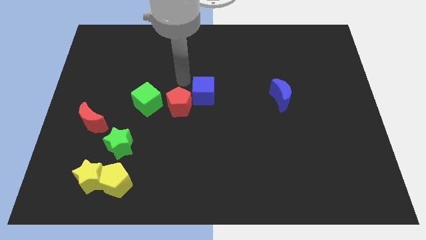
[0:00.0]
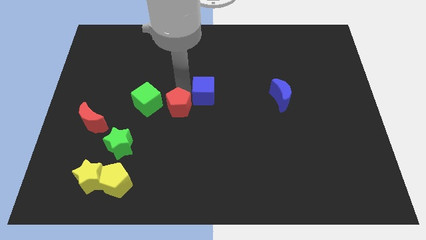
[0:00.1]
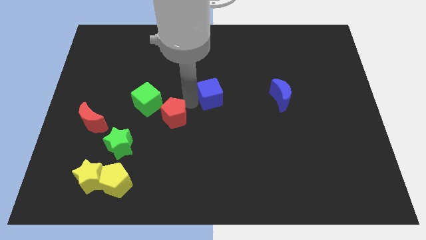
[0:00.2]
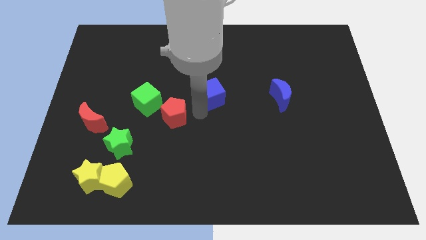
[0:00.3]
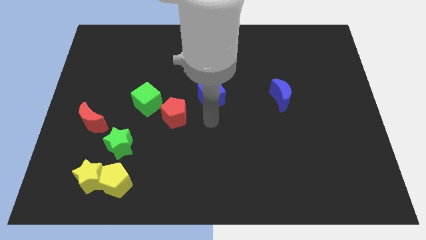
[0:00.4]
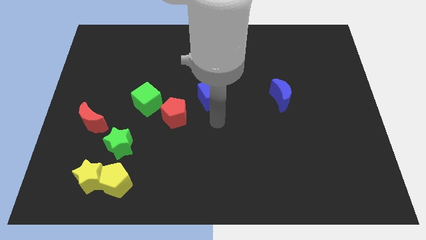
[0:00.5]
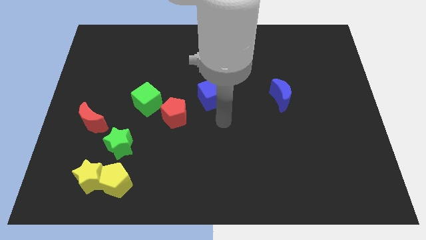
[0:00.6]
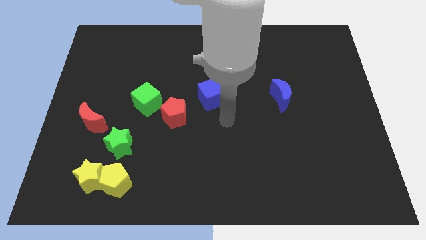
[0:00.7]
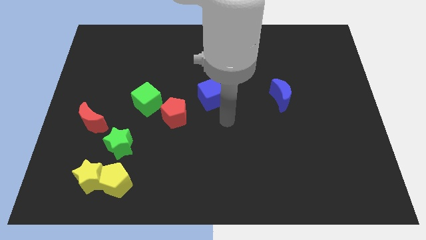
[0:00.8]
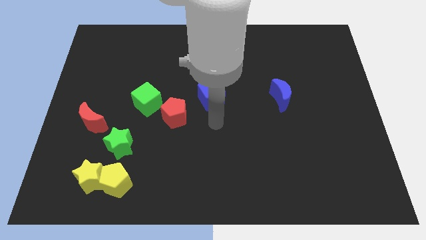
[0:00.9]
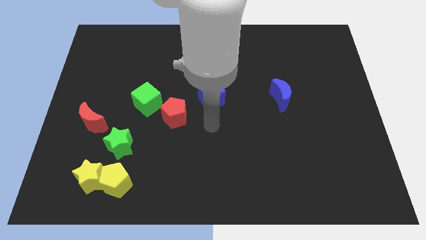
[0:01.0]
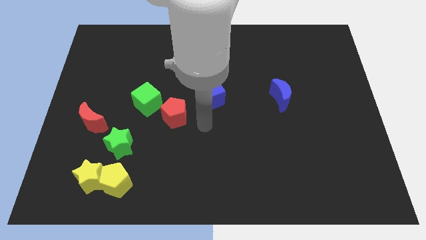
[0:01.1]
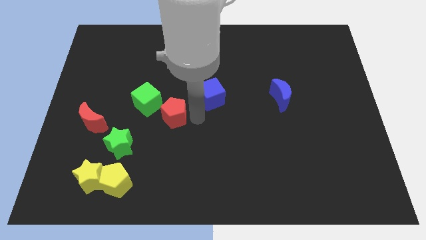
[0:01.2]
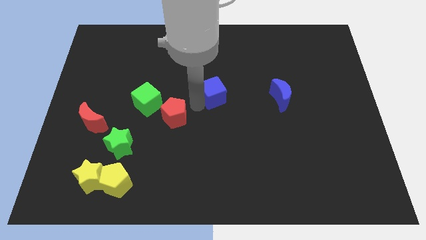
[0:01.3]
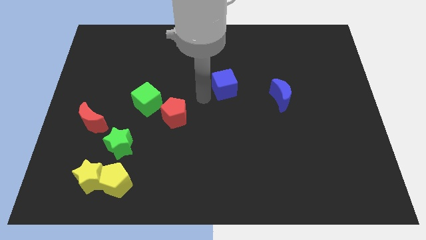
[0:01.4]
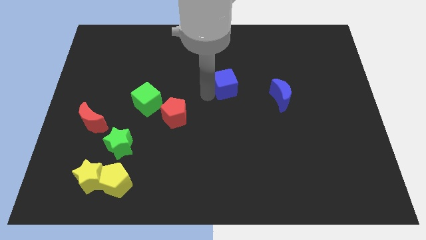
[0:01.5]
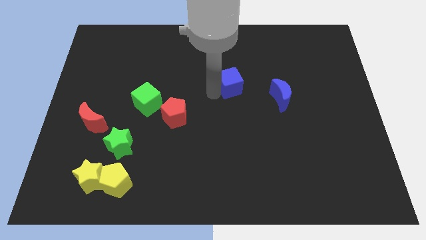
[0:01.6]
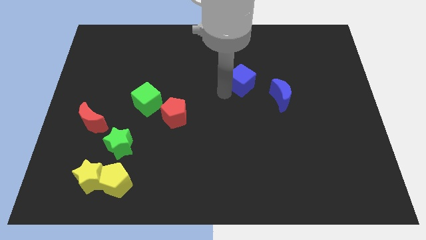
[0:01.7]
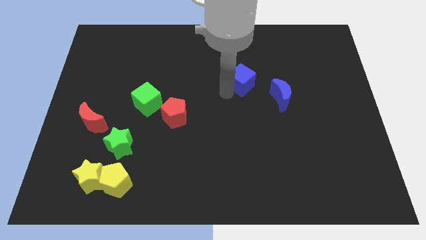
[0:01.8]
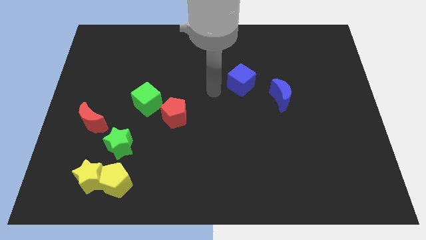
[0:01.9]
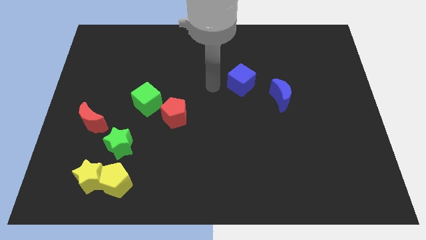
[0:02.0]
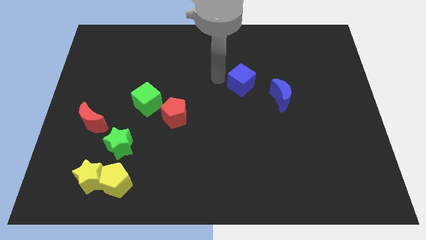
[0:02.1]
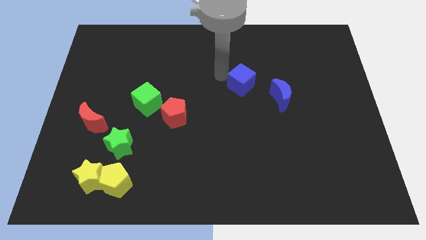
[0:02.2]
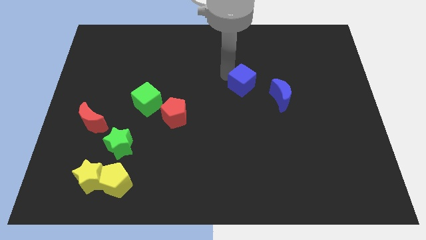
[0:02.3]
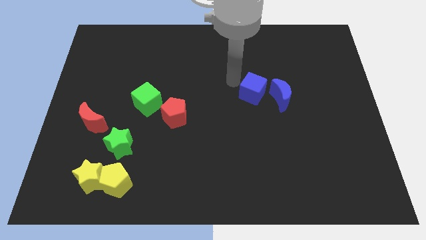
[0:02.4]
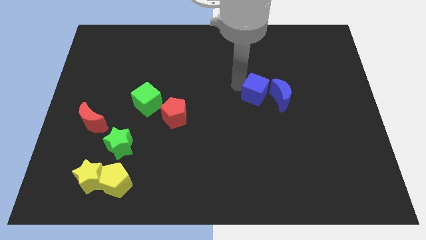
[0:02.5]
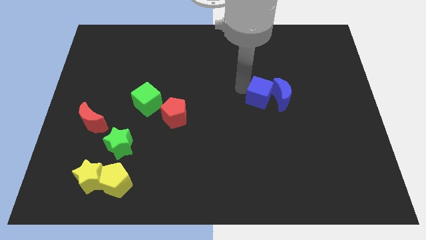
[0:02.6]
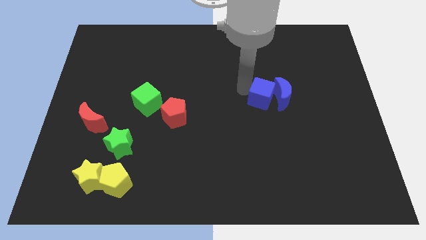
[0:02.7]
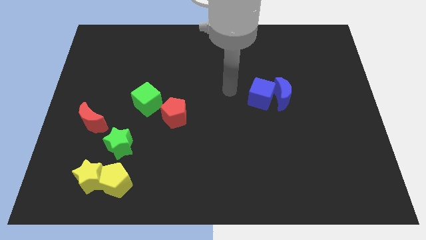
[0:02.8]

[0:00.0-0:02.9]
push the blue cube into the blue moon

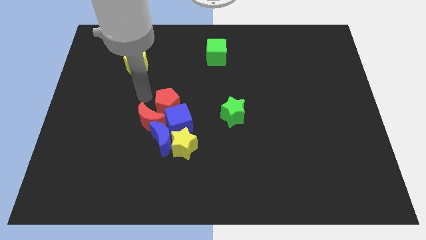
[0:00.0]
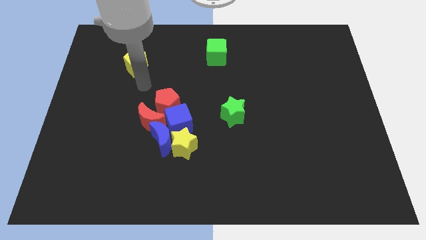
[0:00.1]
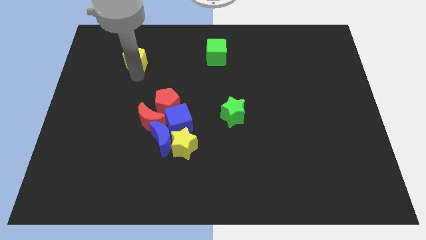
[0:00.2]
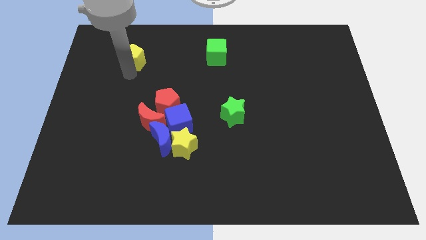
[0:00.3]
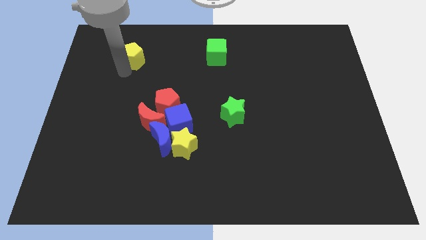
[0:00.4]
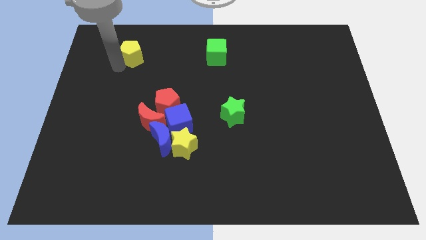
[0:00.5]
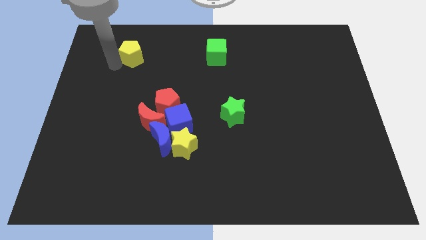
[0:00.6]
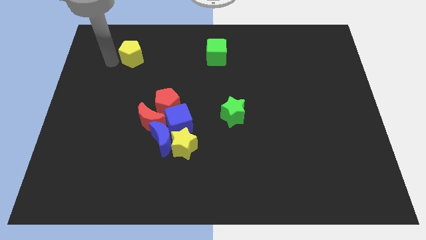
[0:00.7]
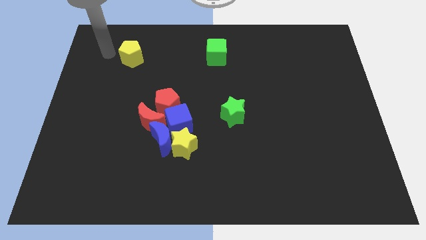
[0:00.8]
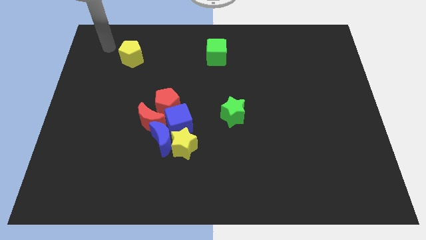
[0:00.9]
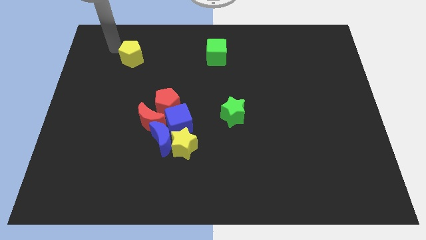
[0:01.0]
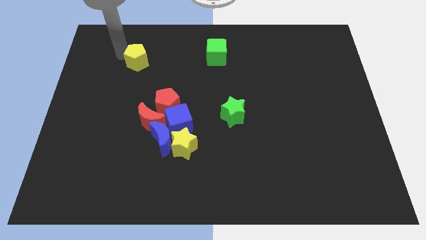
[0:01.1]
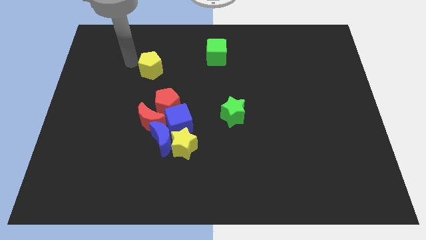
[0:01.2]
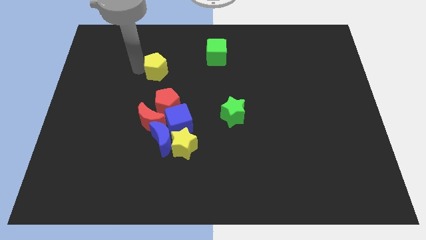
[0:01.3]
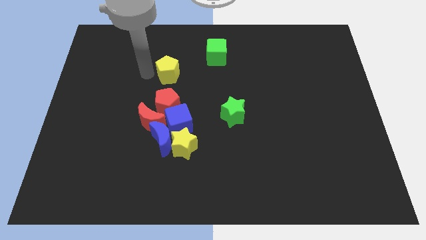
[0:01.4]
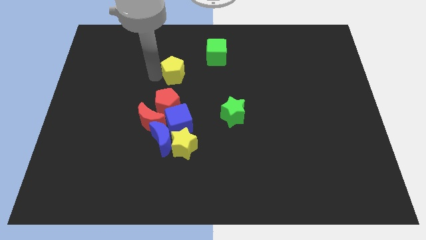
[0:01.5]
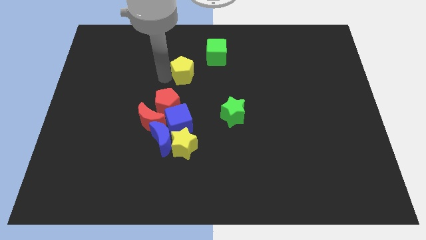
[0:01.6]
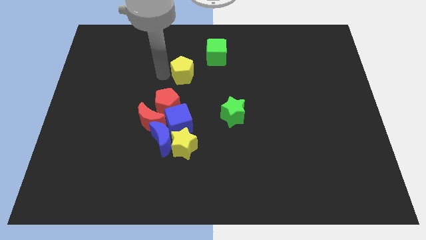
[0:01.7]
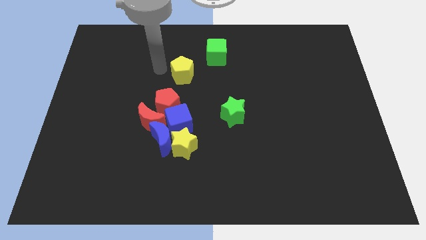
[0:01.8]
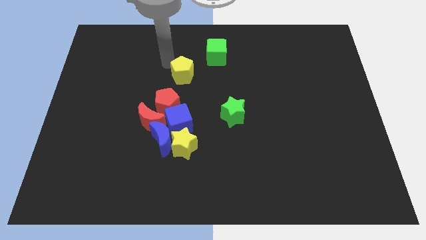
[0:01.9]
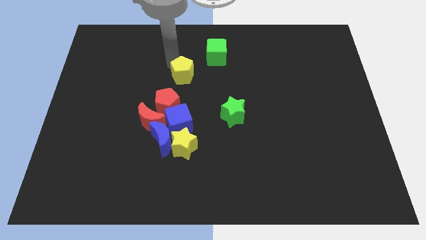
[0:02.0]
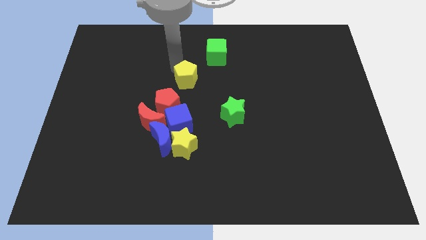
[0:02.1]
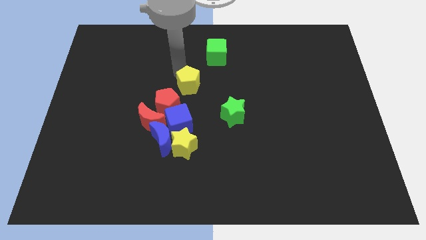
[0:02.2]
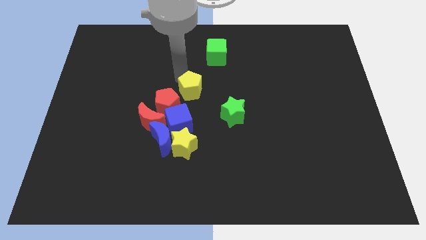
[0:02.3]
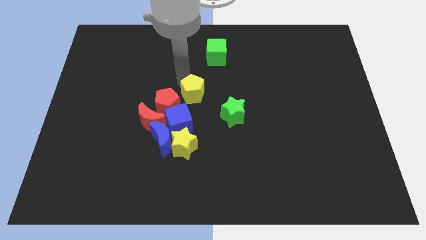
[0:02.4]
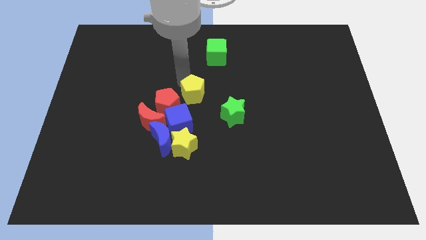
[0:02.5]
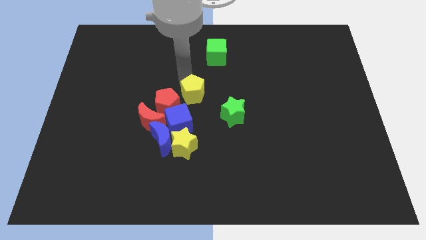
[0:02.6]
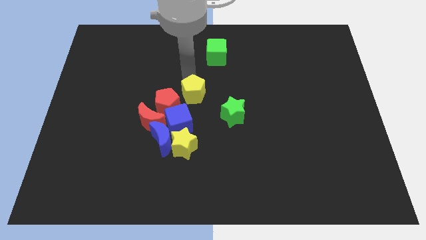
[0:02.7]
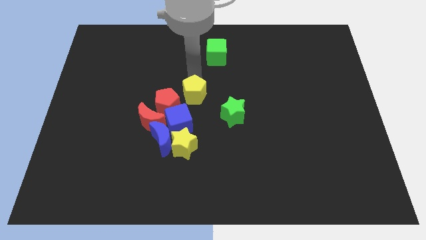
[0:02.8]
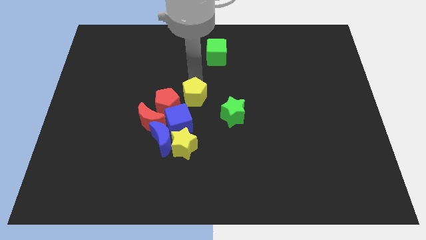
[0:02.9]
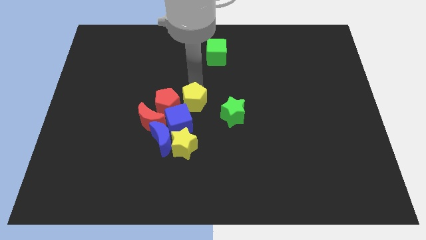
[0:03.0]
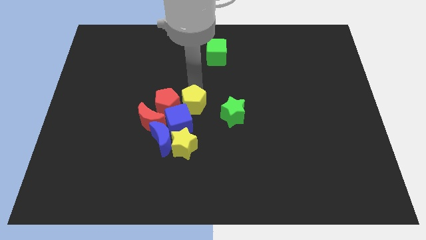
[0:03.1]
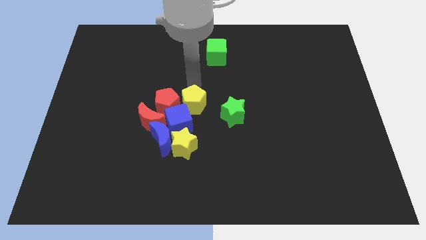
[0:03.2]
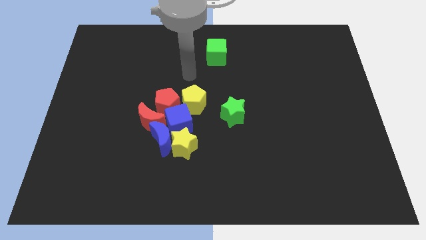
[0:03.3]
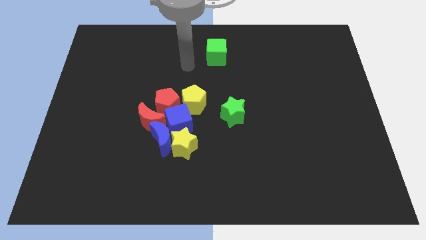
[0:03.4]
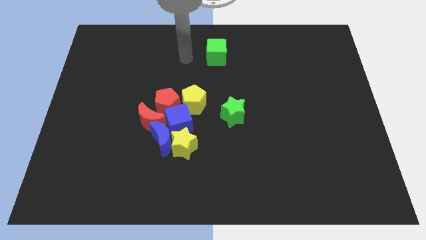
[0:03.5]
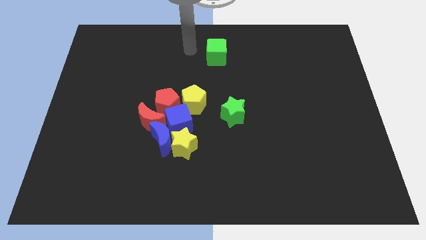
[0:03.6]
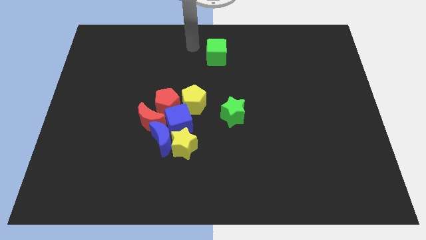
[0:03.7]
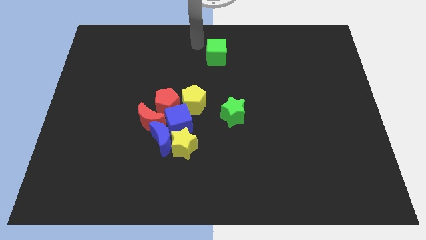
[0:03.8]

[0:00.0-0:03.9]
slide the yellow pentagon to the top right side of the blue cube

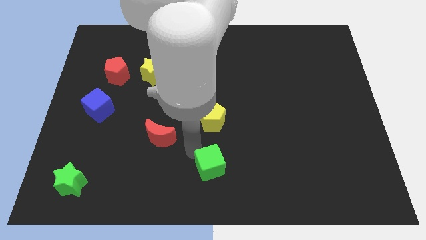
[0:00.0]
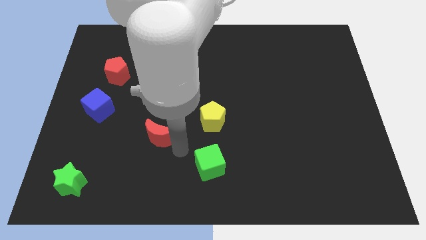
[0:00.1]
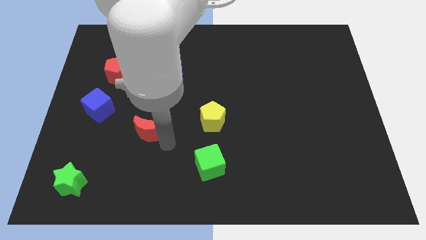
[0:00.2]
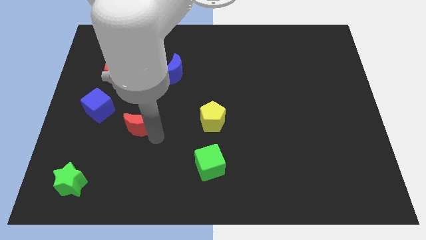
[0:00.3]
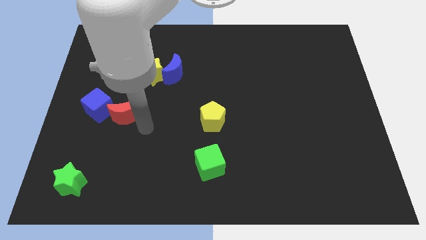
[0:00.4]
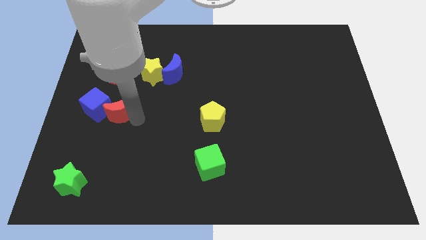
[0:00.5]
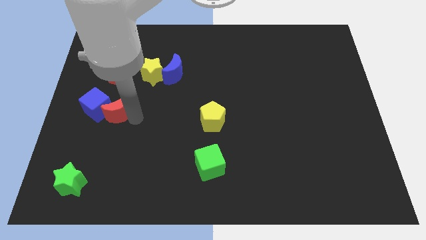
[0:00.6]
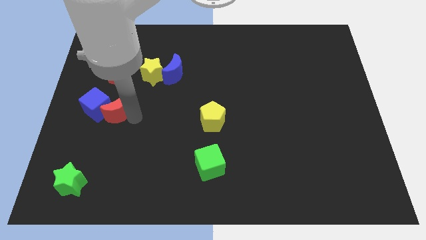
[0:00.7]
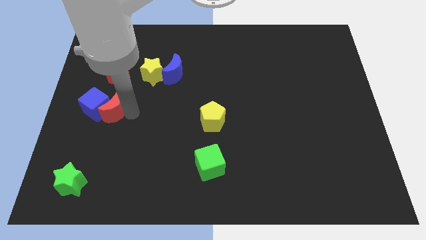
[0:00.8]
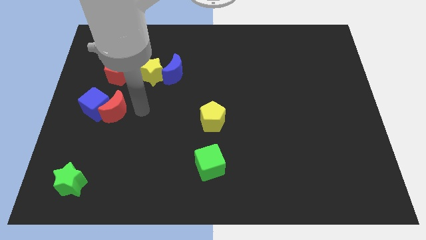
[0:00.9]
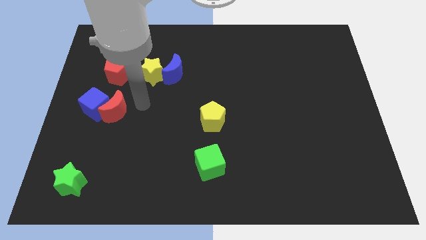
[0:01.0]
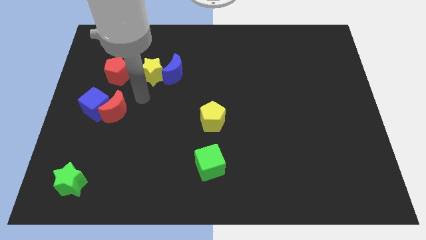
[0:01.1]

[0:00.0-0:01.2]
push the red crescent into the blue cube

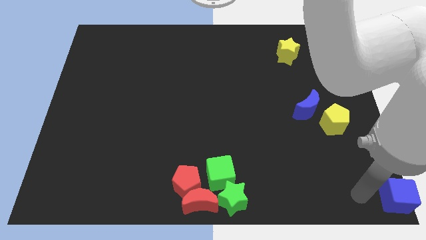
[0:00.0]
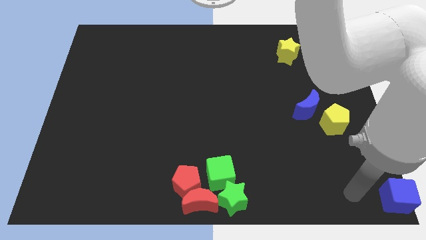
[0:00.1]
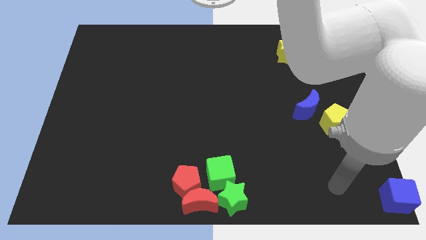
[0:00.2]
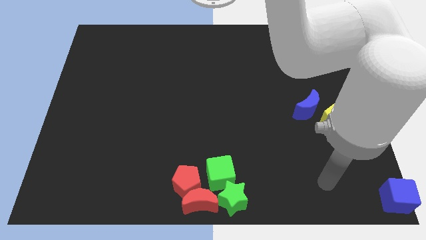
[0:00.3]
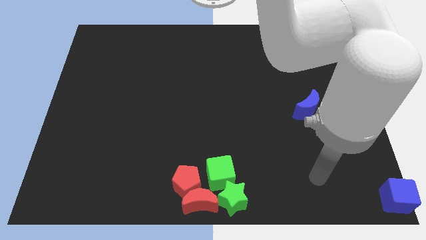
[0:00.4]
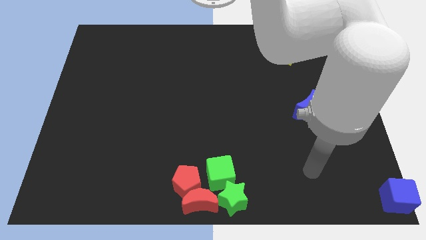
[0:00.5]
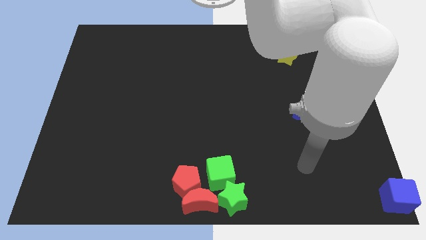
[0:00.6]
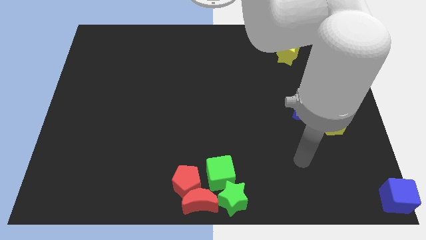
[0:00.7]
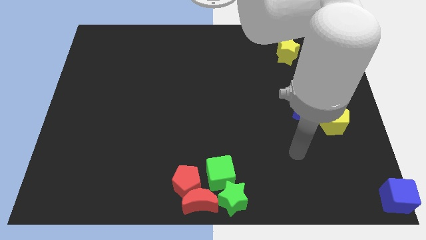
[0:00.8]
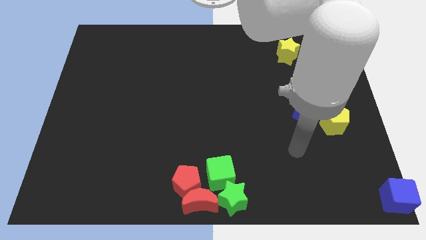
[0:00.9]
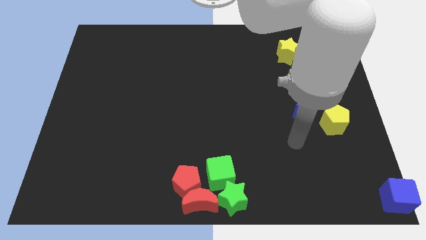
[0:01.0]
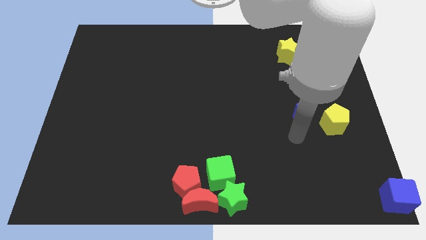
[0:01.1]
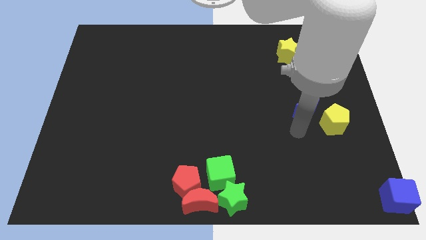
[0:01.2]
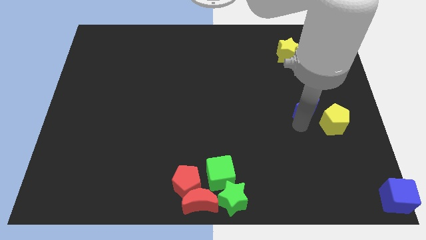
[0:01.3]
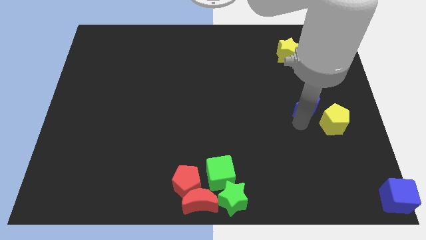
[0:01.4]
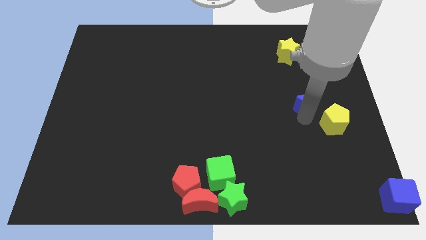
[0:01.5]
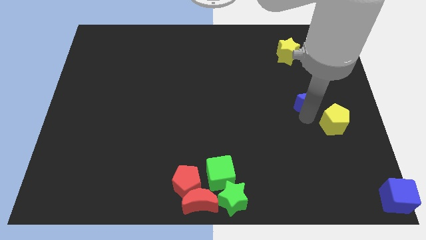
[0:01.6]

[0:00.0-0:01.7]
tap the blue crescent at the bottom
